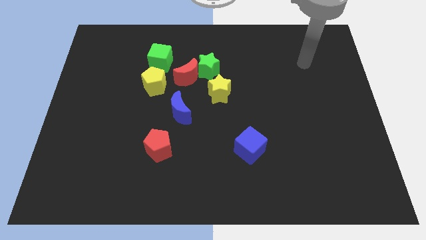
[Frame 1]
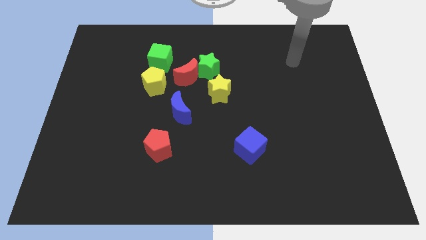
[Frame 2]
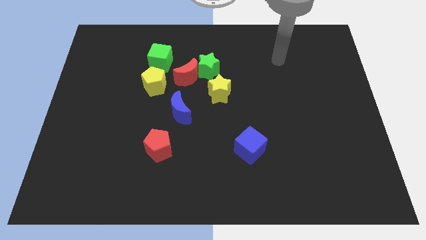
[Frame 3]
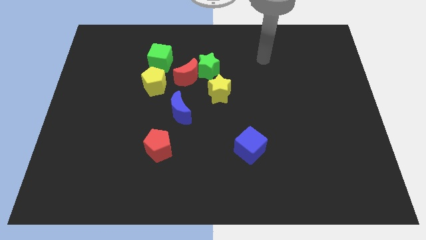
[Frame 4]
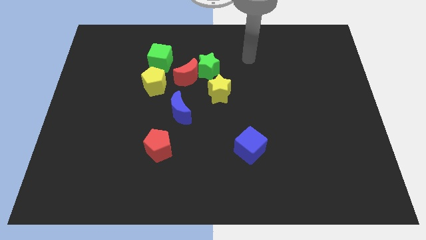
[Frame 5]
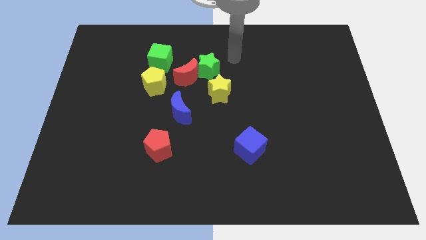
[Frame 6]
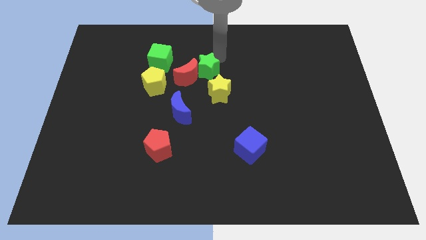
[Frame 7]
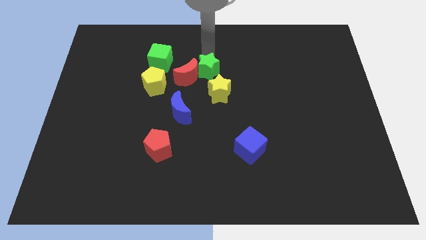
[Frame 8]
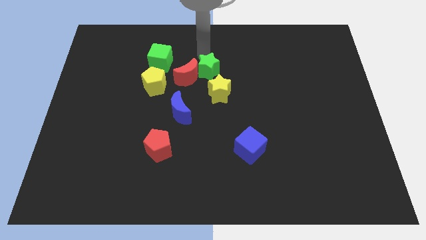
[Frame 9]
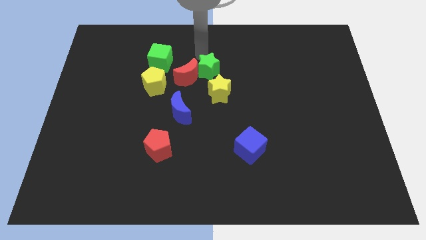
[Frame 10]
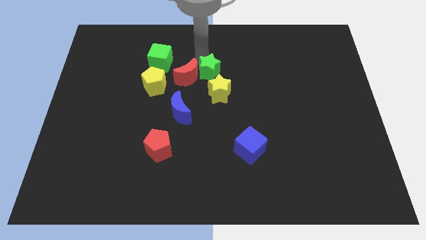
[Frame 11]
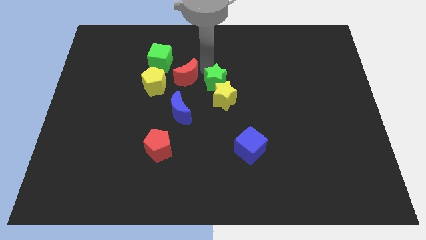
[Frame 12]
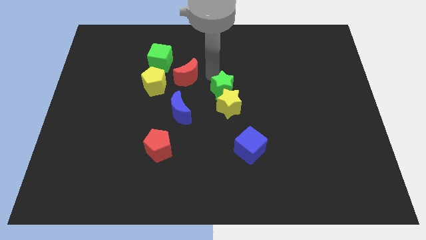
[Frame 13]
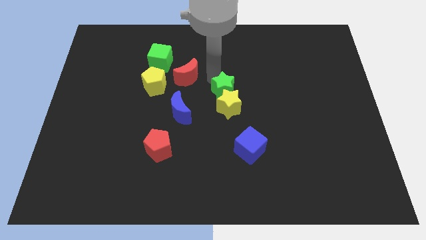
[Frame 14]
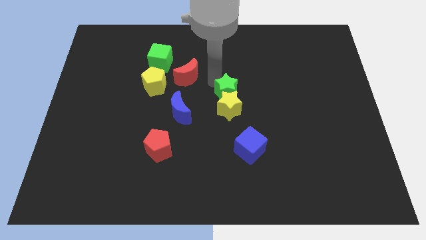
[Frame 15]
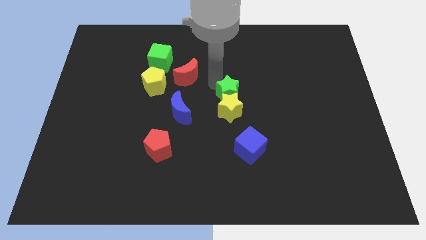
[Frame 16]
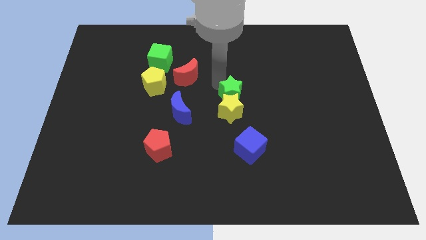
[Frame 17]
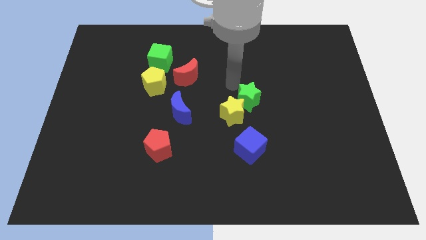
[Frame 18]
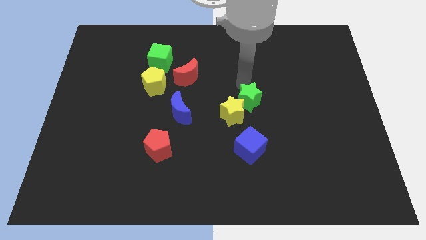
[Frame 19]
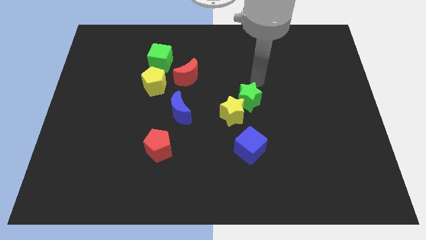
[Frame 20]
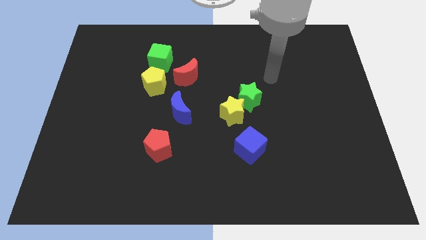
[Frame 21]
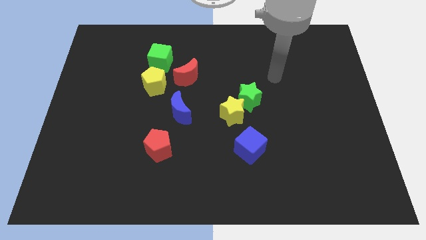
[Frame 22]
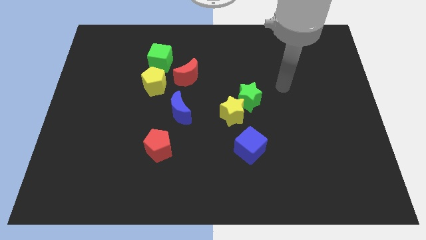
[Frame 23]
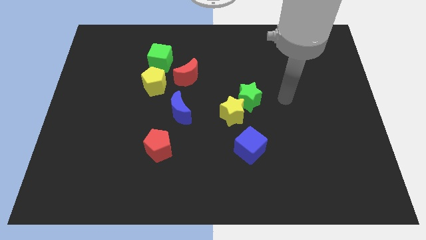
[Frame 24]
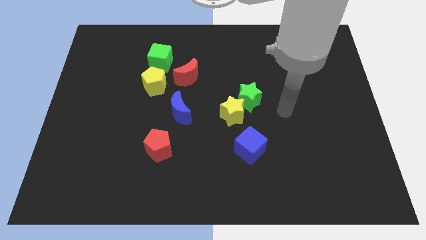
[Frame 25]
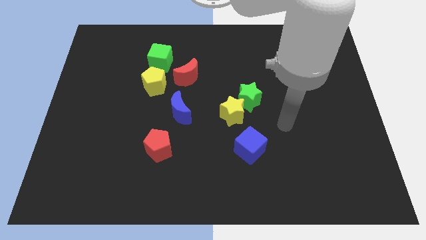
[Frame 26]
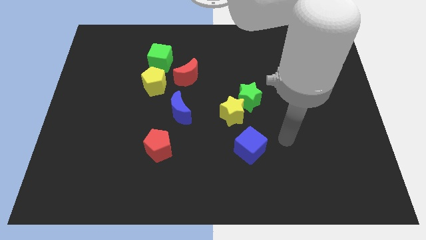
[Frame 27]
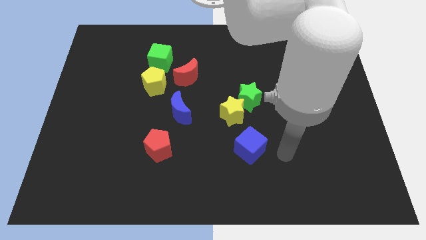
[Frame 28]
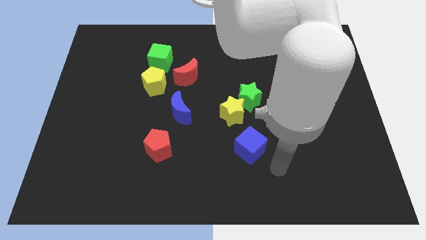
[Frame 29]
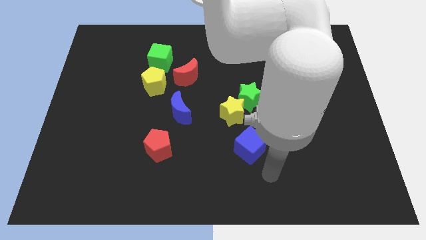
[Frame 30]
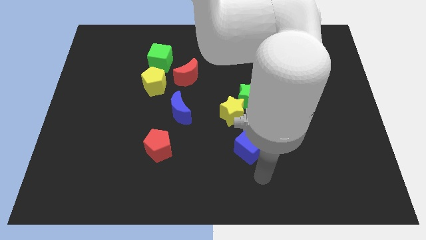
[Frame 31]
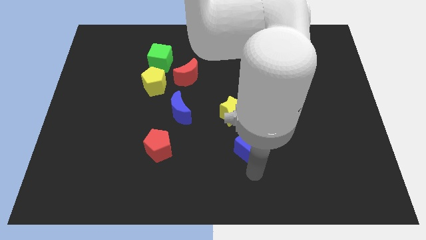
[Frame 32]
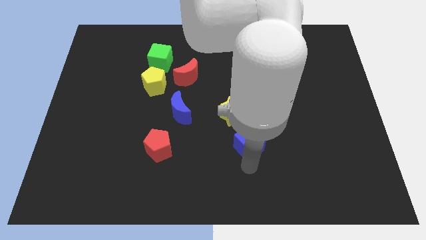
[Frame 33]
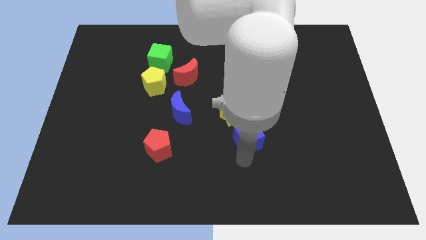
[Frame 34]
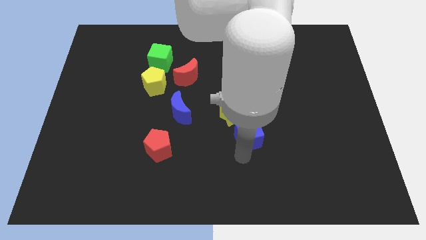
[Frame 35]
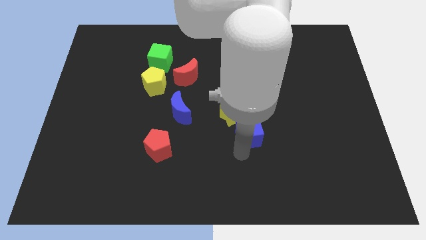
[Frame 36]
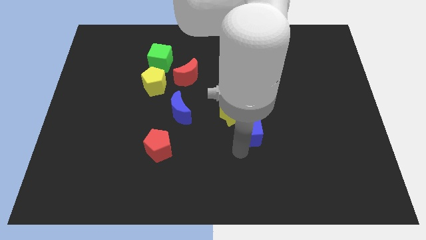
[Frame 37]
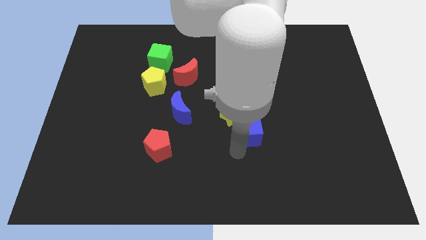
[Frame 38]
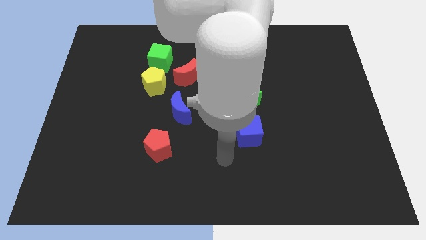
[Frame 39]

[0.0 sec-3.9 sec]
push the stars and blue cube to form a group

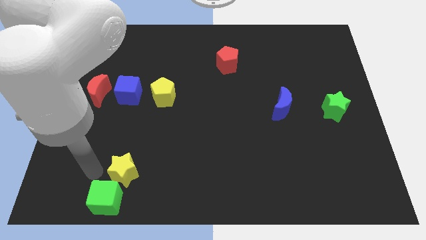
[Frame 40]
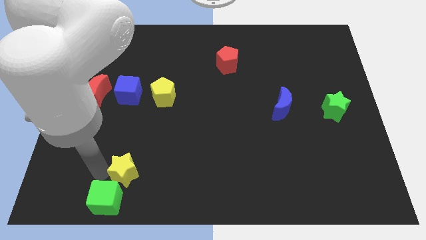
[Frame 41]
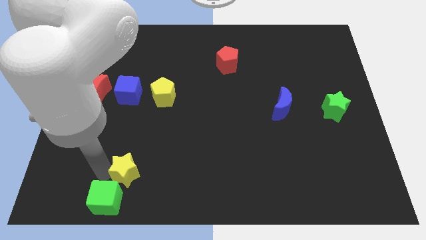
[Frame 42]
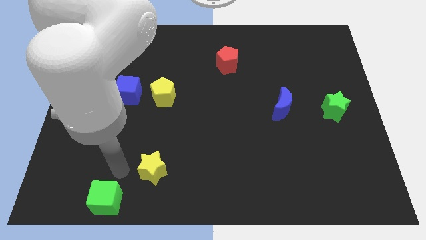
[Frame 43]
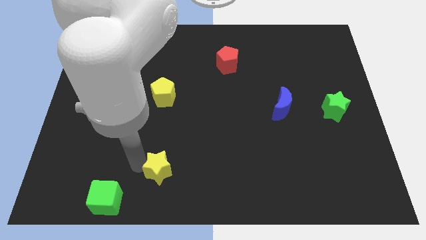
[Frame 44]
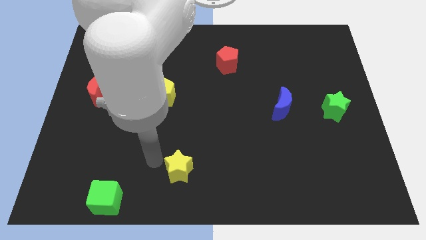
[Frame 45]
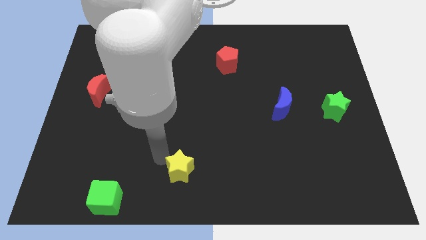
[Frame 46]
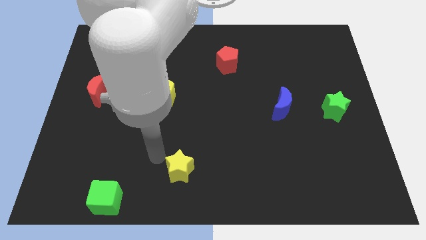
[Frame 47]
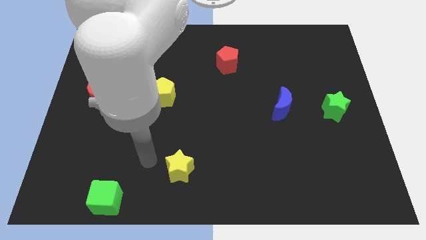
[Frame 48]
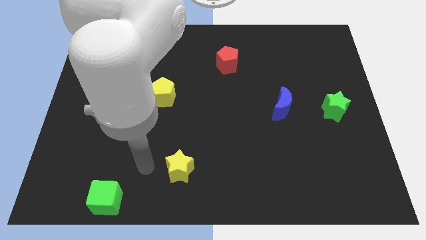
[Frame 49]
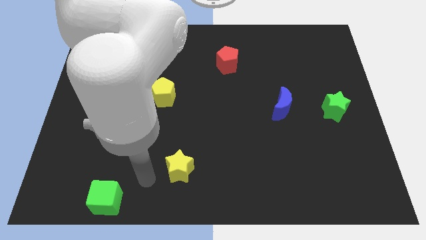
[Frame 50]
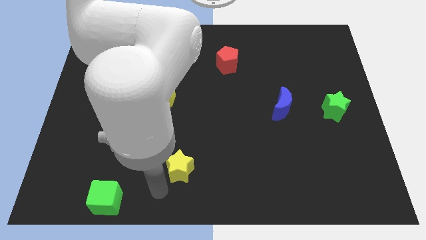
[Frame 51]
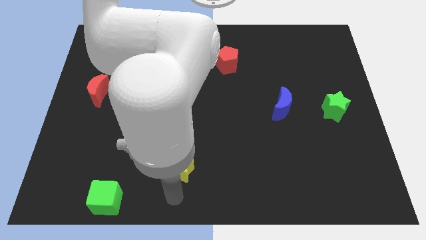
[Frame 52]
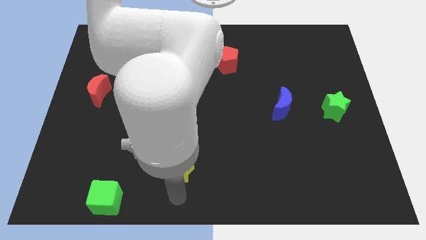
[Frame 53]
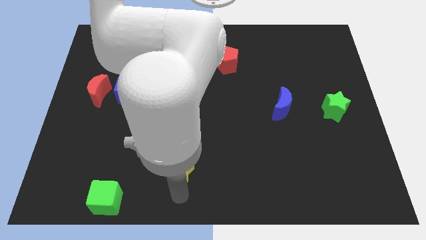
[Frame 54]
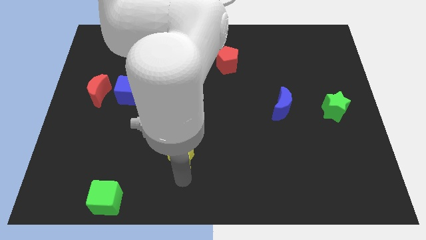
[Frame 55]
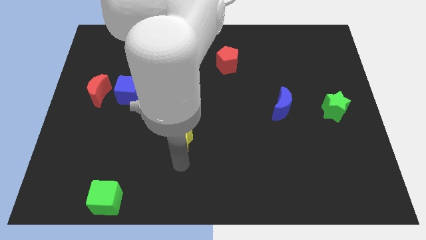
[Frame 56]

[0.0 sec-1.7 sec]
push the yellow star to the center of the board

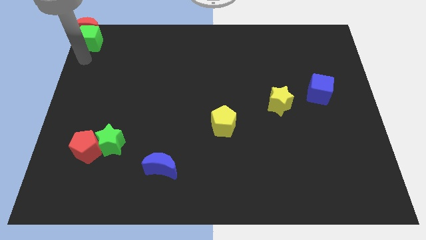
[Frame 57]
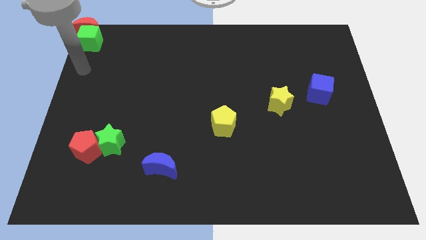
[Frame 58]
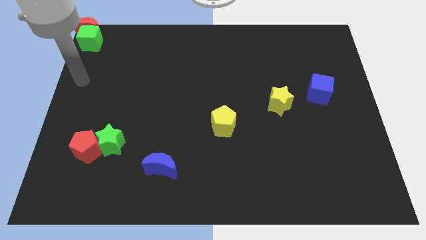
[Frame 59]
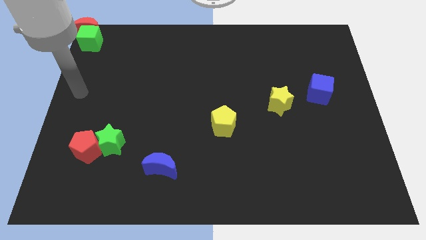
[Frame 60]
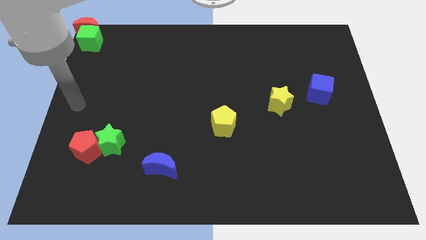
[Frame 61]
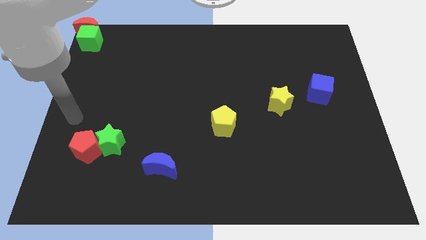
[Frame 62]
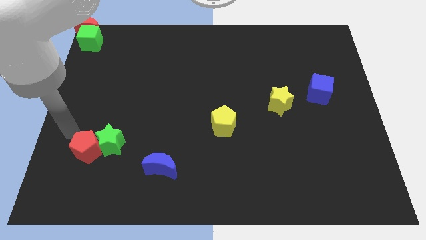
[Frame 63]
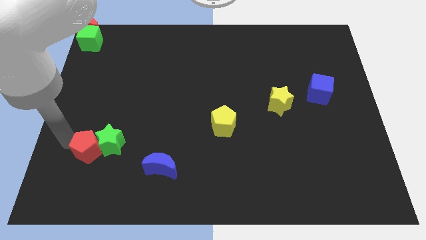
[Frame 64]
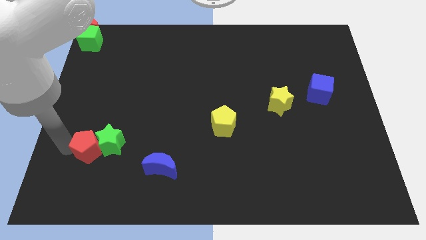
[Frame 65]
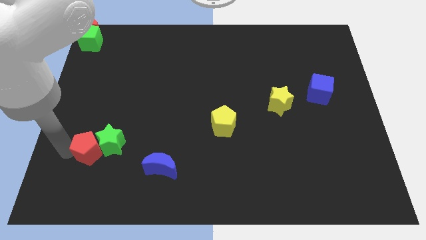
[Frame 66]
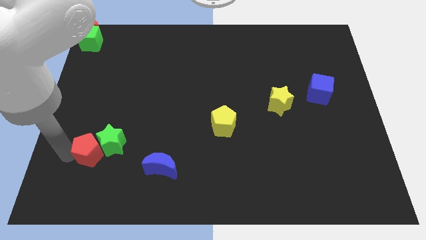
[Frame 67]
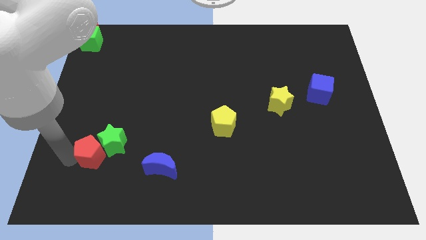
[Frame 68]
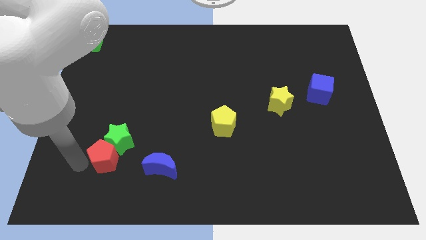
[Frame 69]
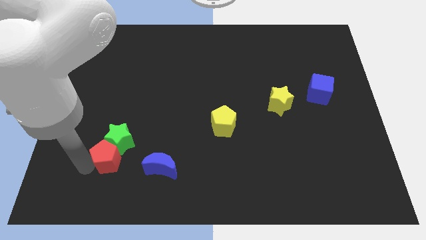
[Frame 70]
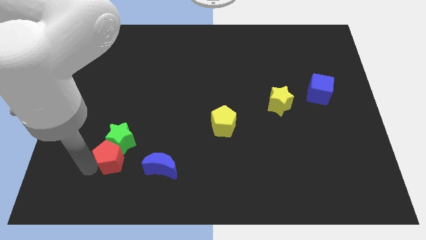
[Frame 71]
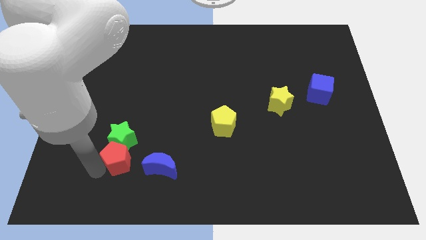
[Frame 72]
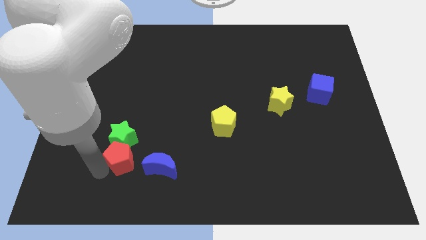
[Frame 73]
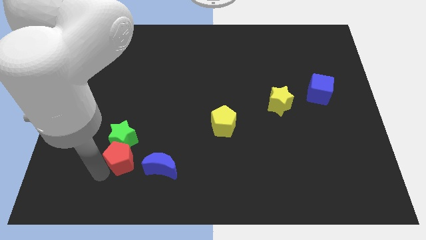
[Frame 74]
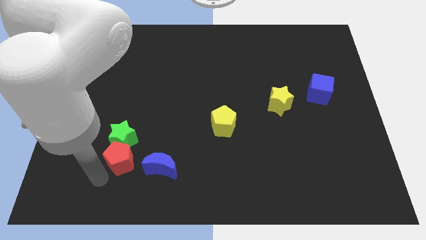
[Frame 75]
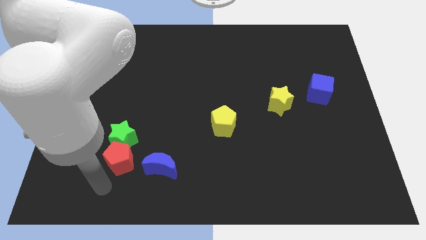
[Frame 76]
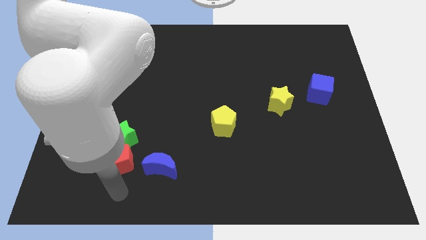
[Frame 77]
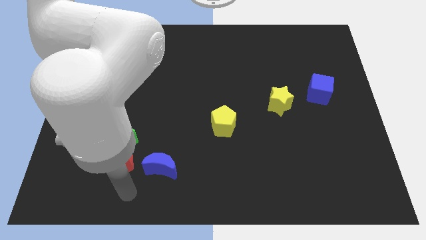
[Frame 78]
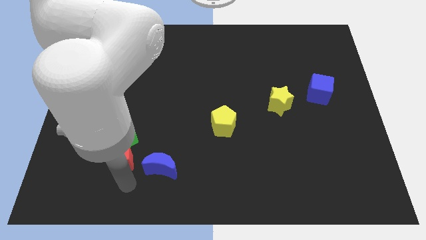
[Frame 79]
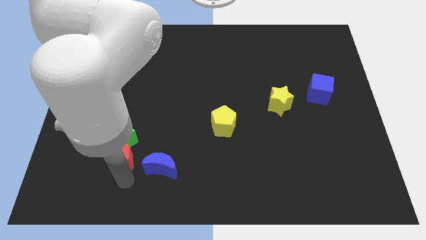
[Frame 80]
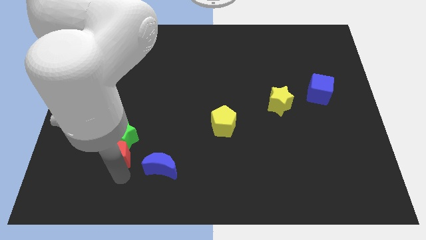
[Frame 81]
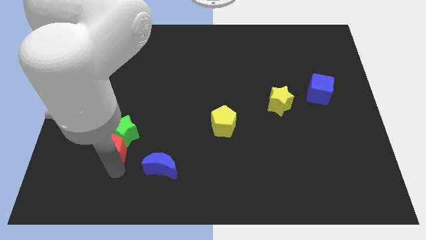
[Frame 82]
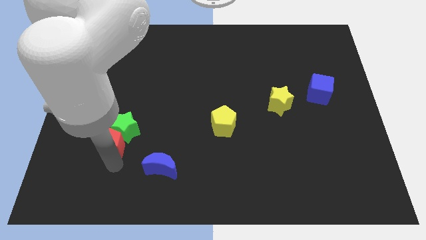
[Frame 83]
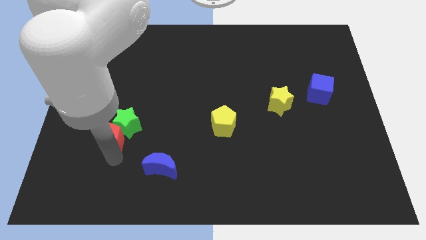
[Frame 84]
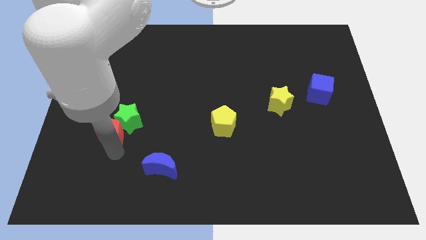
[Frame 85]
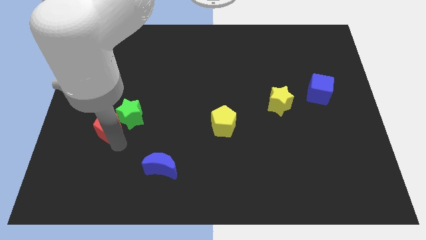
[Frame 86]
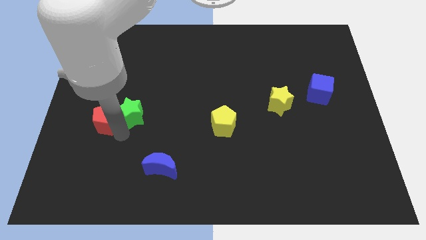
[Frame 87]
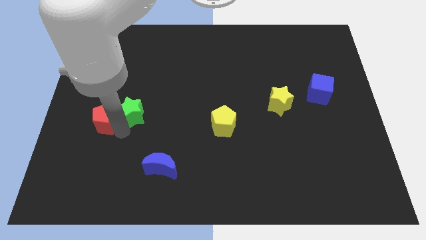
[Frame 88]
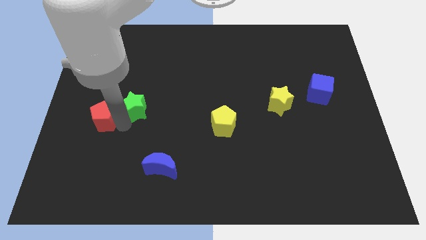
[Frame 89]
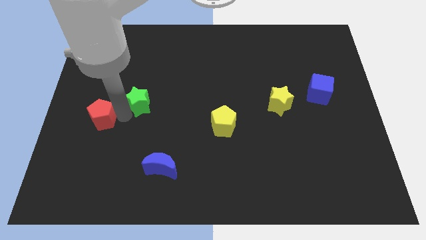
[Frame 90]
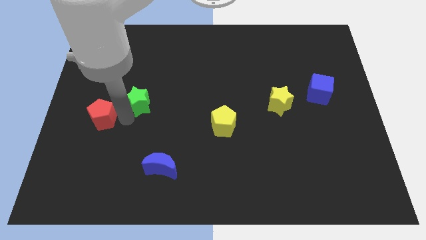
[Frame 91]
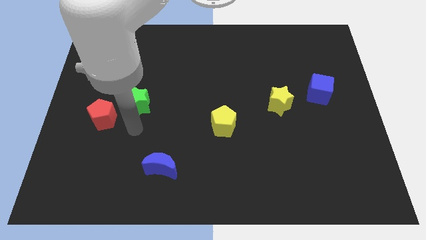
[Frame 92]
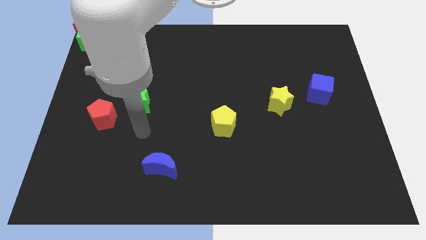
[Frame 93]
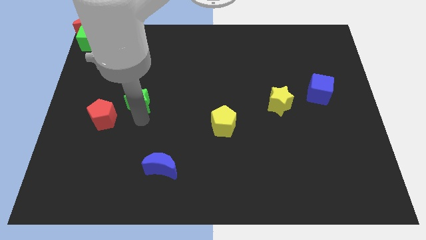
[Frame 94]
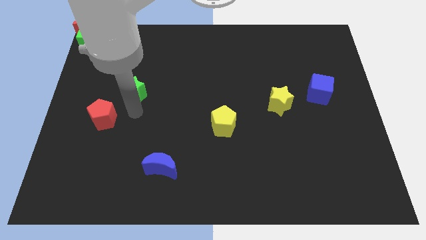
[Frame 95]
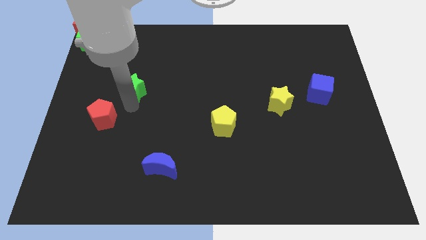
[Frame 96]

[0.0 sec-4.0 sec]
separate the green star from the red pentagon
